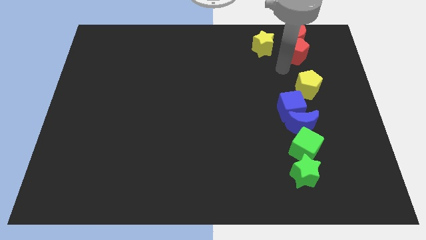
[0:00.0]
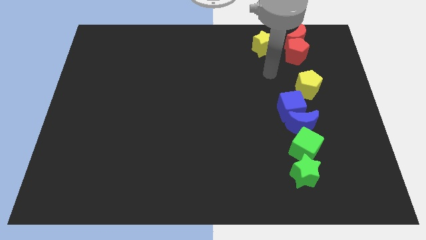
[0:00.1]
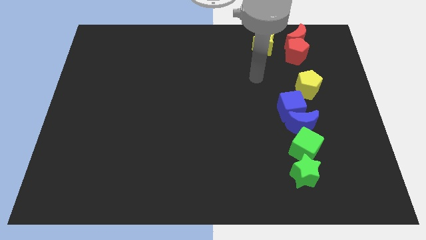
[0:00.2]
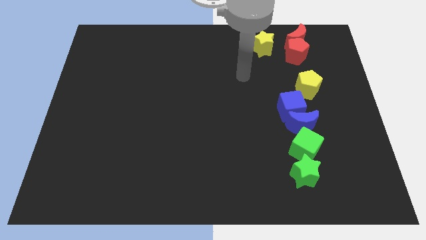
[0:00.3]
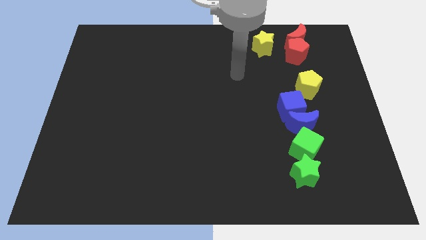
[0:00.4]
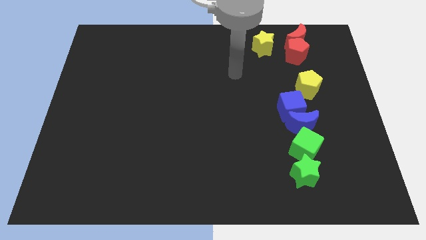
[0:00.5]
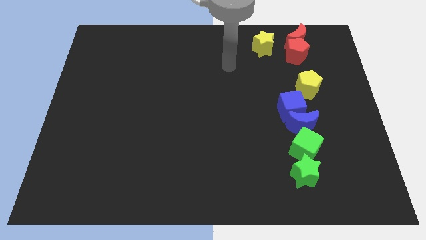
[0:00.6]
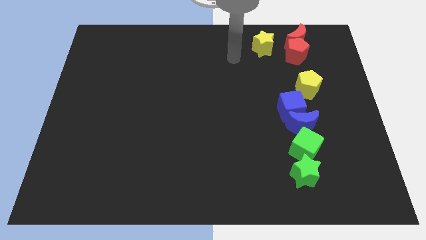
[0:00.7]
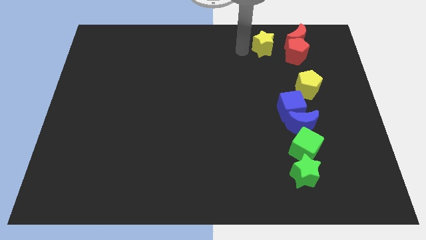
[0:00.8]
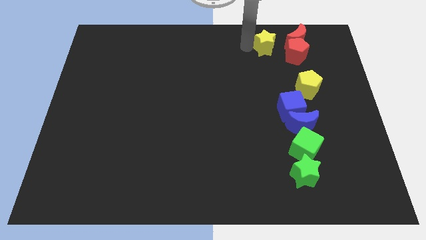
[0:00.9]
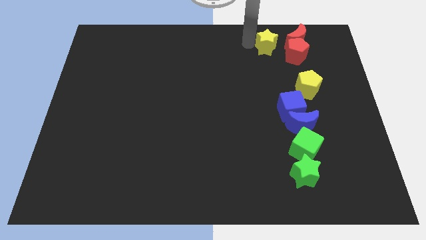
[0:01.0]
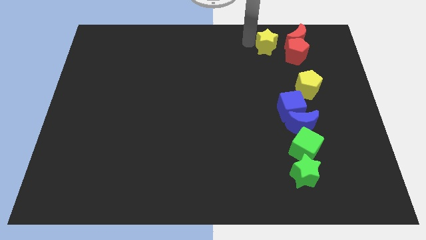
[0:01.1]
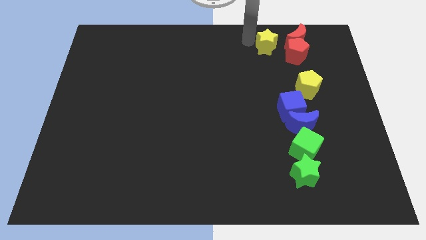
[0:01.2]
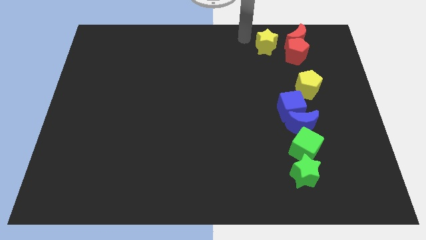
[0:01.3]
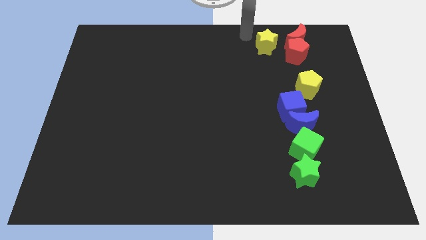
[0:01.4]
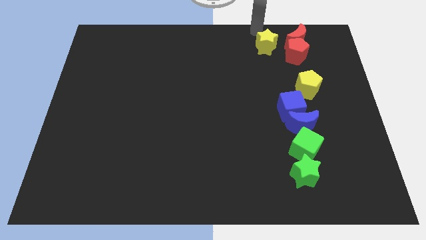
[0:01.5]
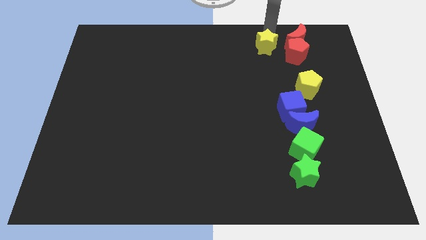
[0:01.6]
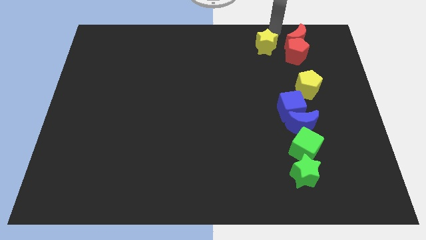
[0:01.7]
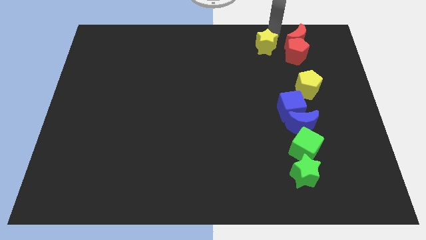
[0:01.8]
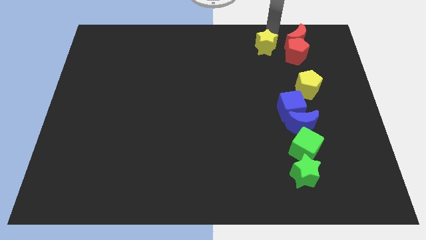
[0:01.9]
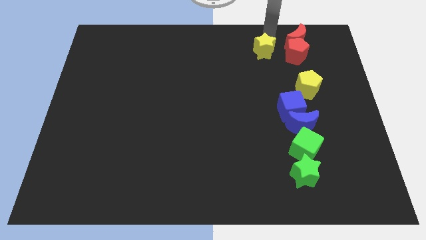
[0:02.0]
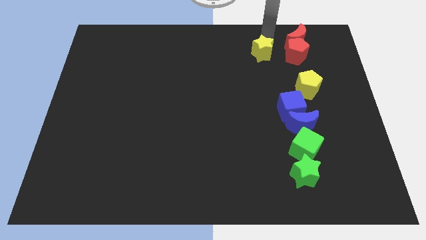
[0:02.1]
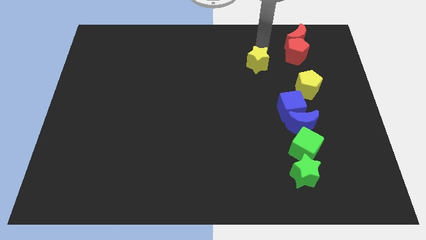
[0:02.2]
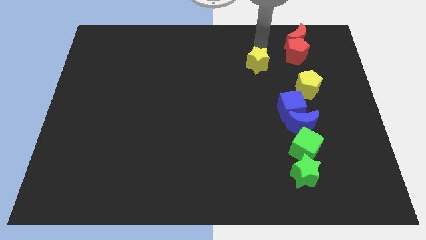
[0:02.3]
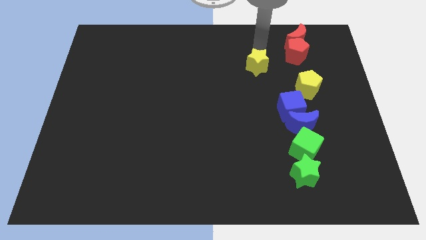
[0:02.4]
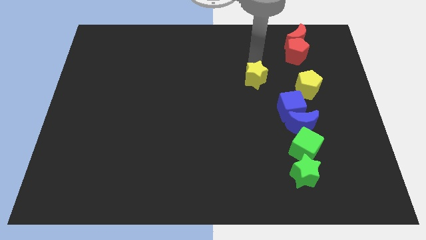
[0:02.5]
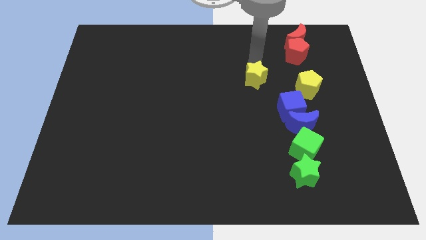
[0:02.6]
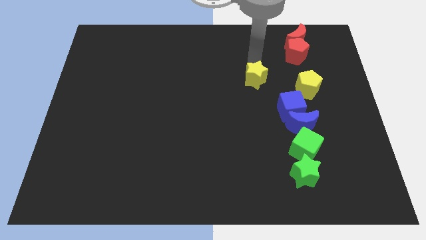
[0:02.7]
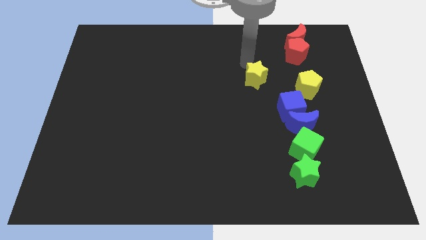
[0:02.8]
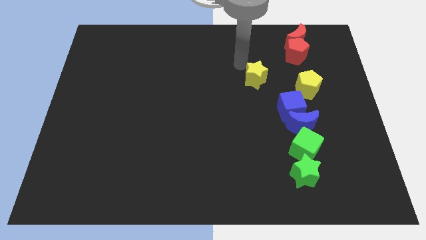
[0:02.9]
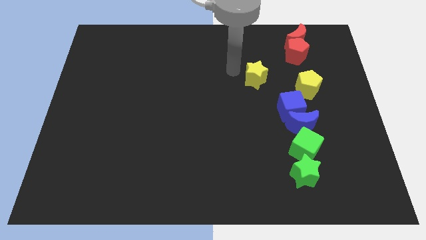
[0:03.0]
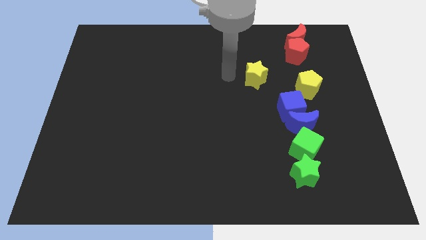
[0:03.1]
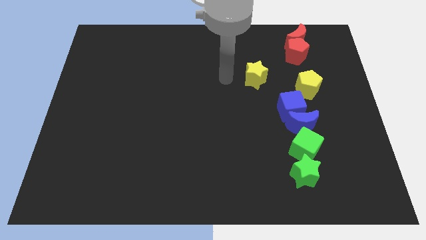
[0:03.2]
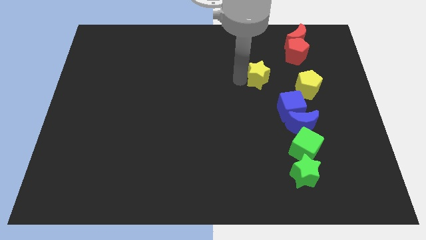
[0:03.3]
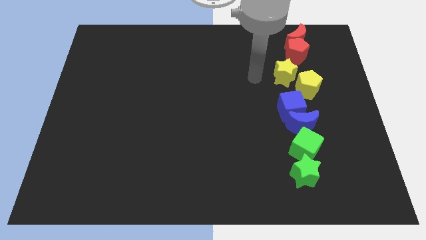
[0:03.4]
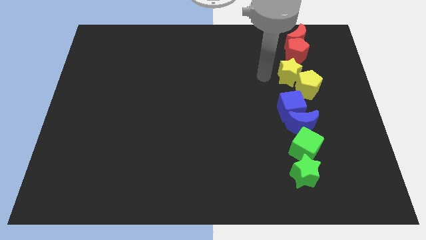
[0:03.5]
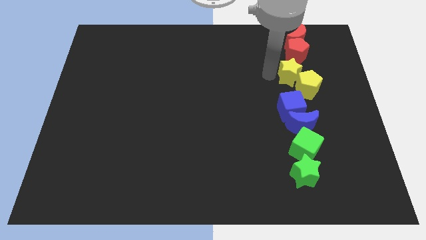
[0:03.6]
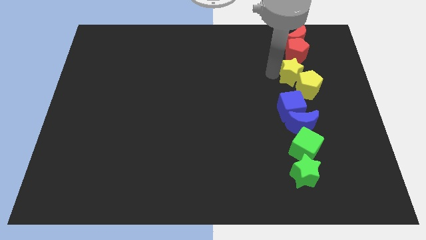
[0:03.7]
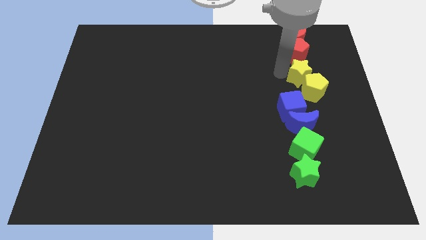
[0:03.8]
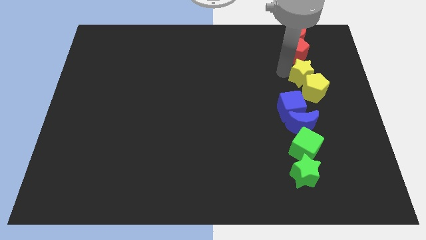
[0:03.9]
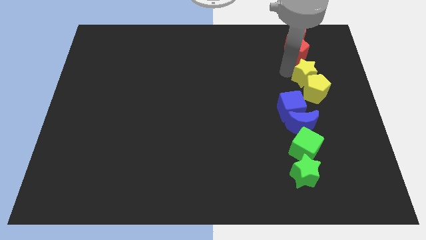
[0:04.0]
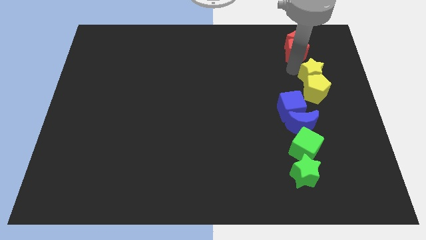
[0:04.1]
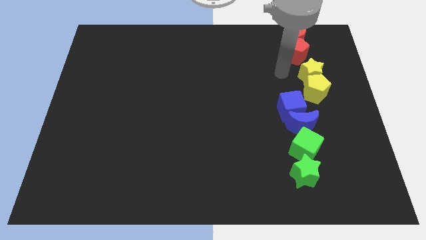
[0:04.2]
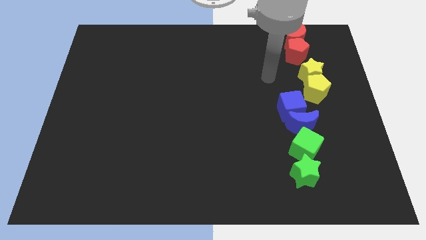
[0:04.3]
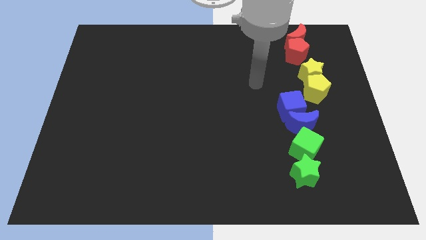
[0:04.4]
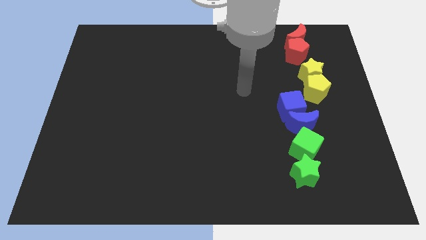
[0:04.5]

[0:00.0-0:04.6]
move the yellow star into the top side of the yellow pentagon

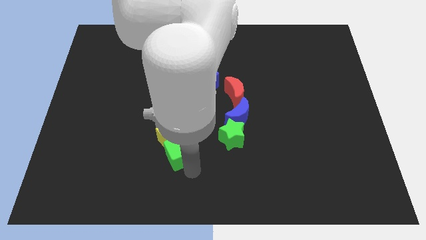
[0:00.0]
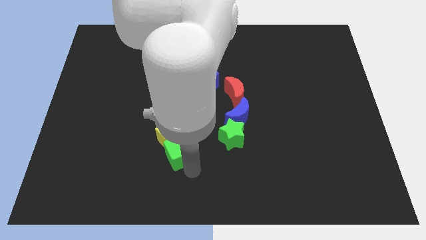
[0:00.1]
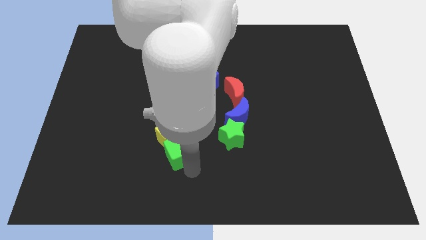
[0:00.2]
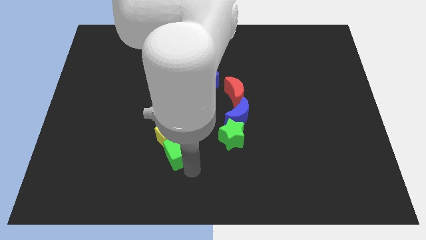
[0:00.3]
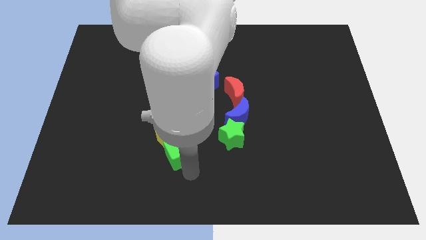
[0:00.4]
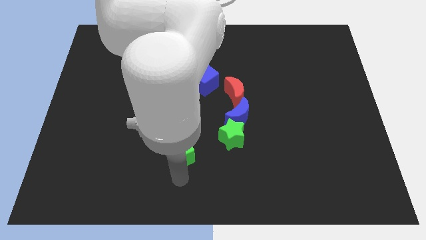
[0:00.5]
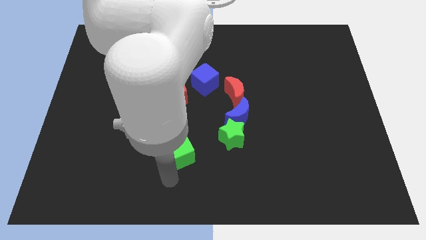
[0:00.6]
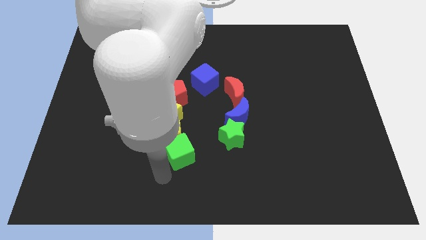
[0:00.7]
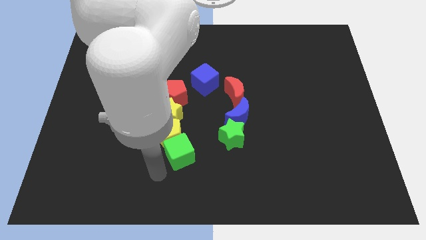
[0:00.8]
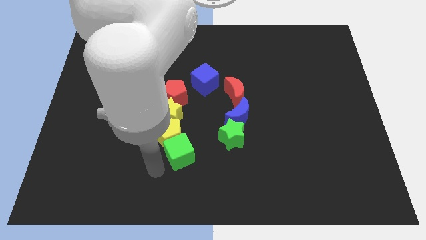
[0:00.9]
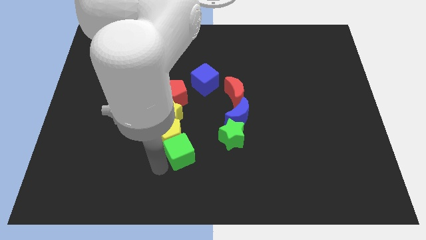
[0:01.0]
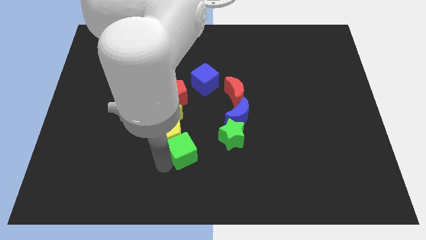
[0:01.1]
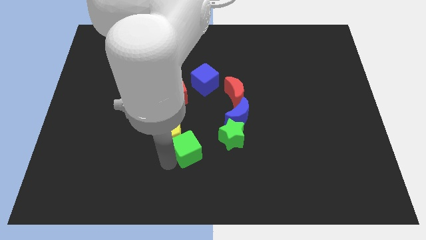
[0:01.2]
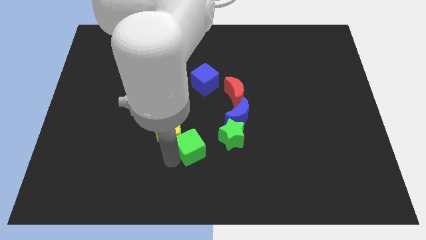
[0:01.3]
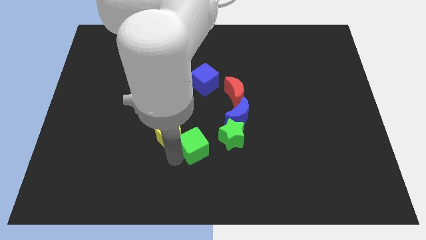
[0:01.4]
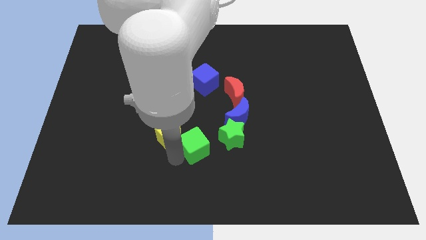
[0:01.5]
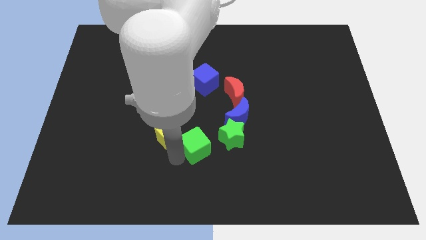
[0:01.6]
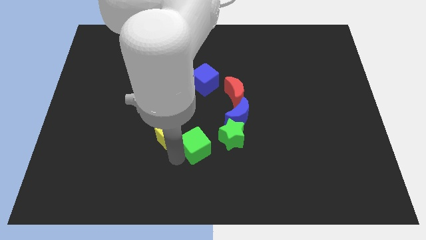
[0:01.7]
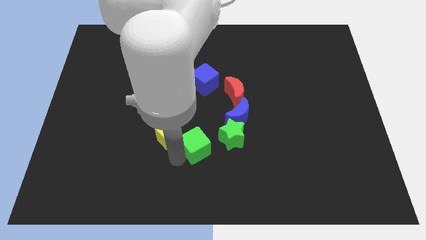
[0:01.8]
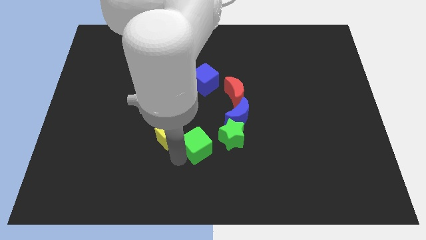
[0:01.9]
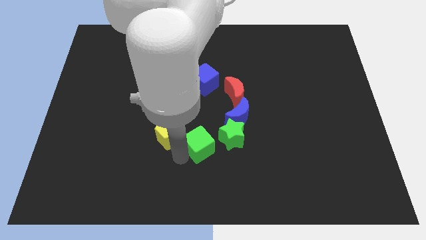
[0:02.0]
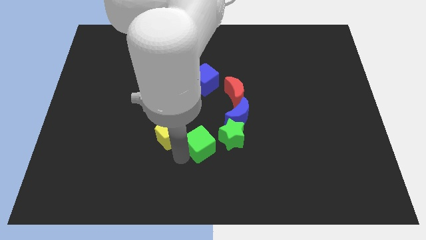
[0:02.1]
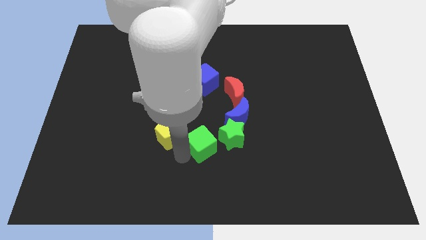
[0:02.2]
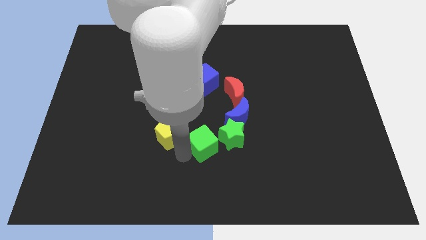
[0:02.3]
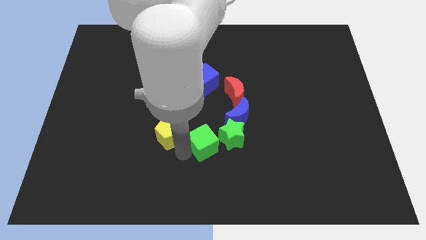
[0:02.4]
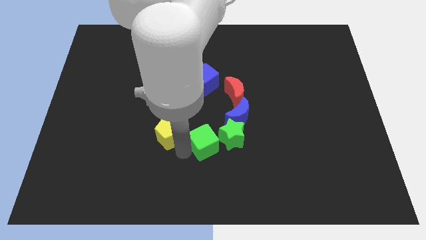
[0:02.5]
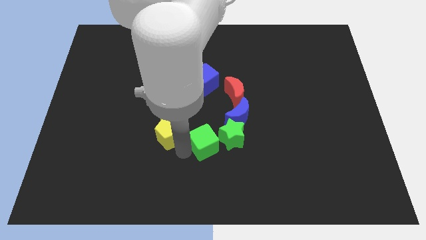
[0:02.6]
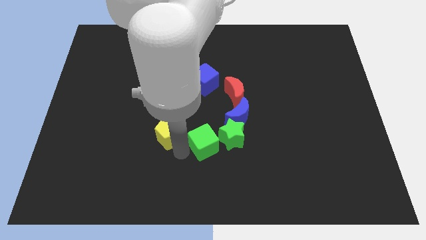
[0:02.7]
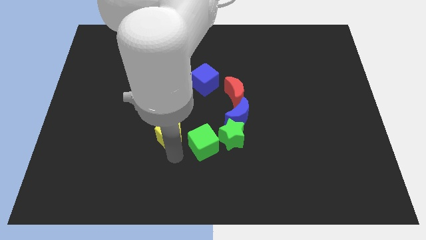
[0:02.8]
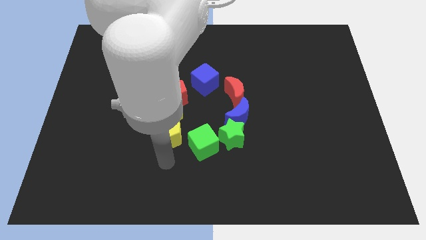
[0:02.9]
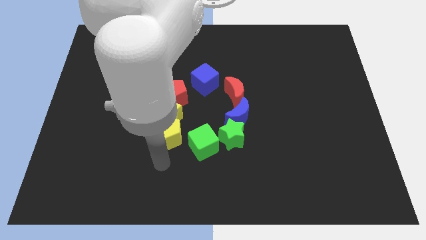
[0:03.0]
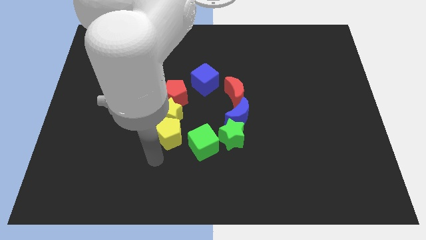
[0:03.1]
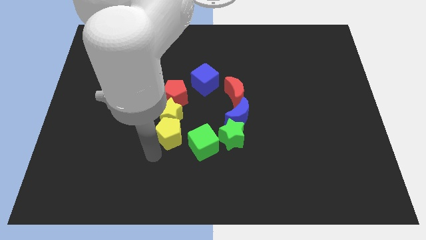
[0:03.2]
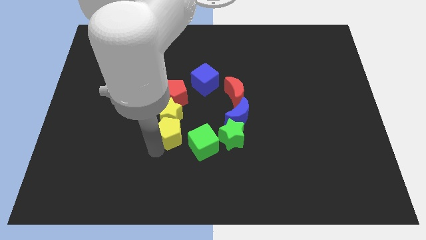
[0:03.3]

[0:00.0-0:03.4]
move the green cube towards the green star

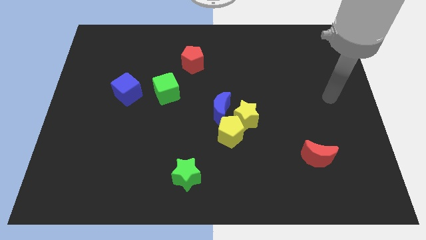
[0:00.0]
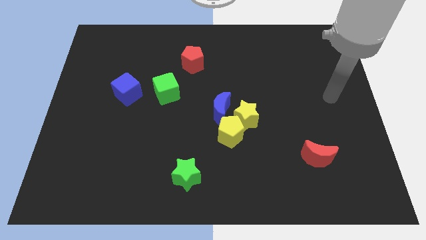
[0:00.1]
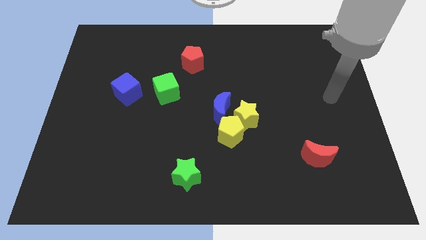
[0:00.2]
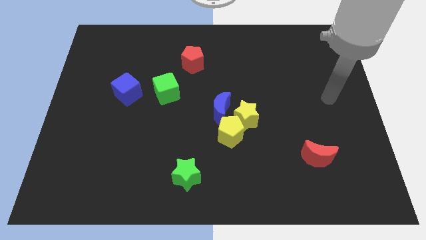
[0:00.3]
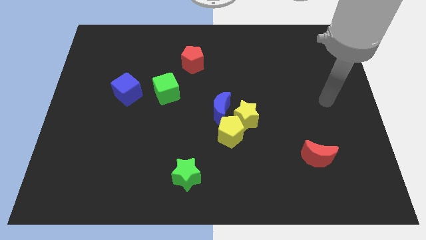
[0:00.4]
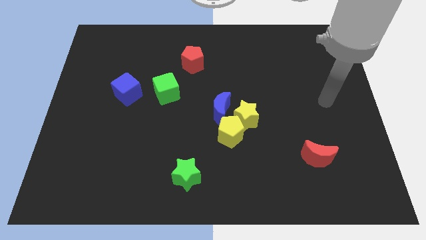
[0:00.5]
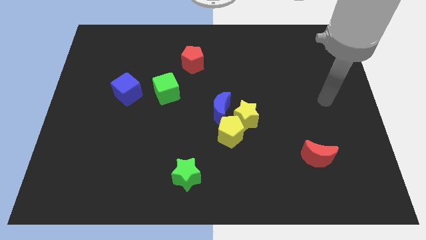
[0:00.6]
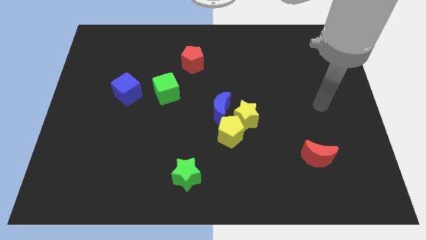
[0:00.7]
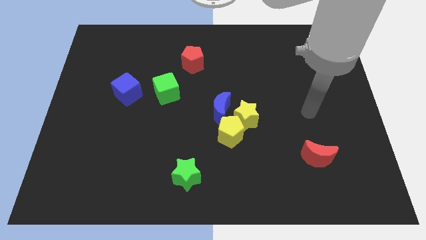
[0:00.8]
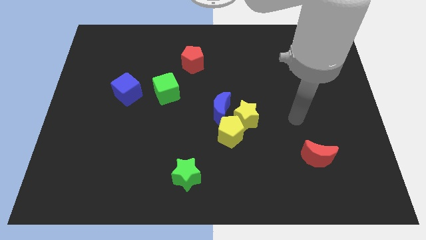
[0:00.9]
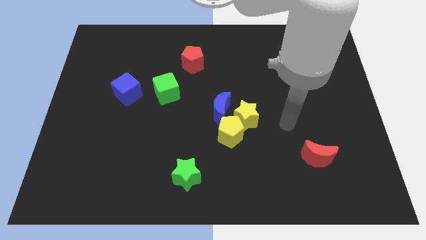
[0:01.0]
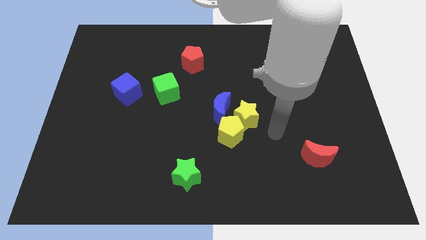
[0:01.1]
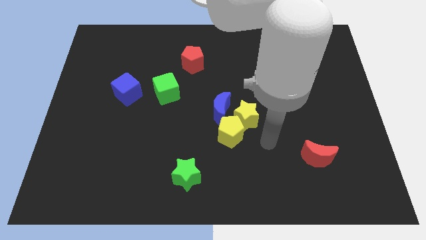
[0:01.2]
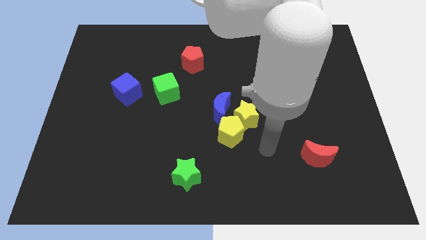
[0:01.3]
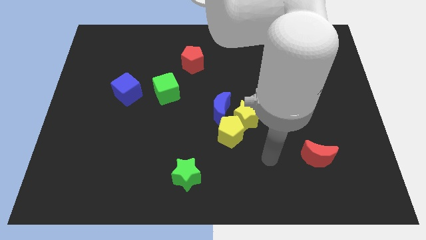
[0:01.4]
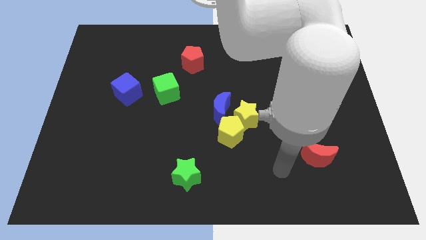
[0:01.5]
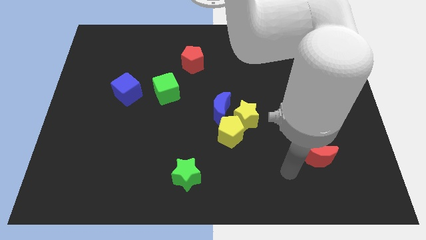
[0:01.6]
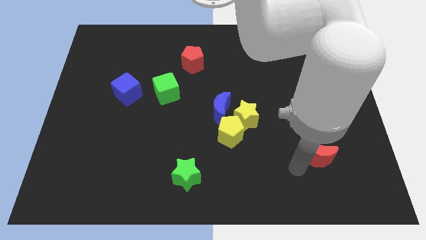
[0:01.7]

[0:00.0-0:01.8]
move your arm towards the red crescent
